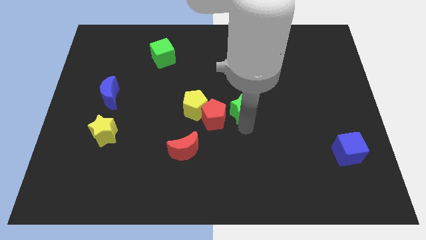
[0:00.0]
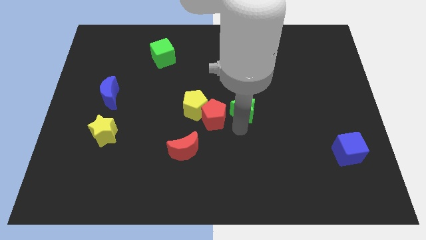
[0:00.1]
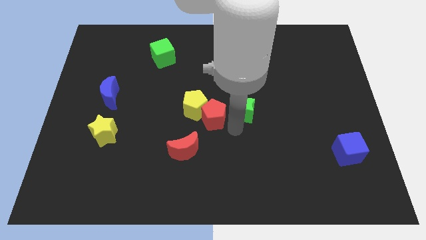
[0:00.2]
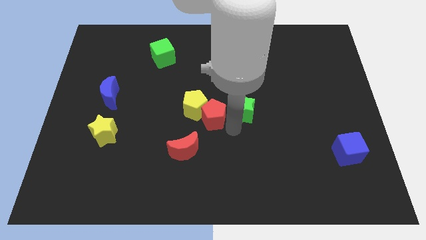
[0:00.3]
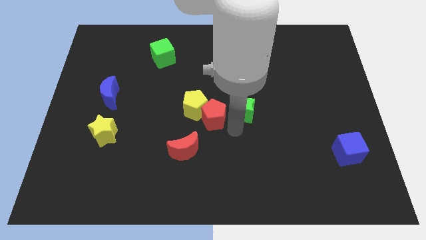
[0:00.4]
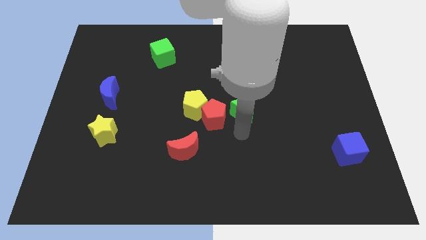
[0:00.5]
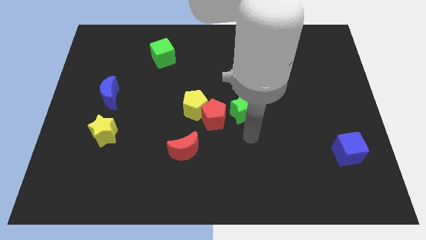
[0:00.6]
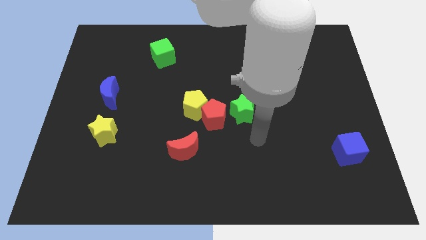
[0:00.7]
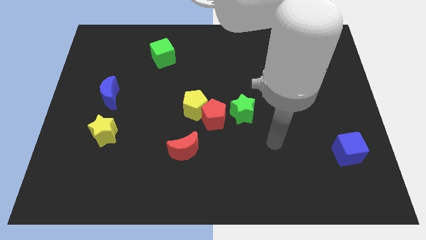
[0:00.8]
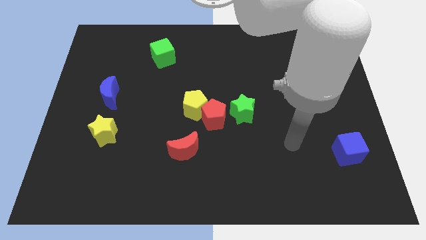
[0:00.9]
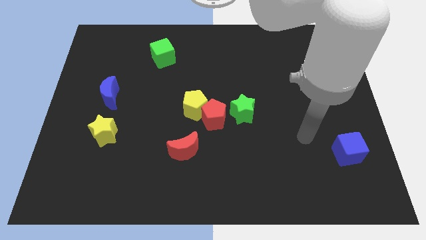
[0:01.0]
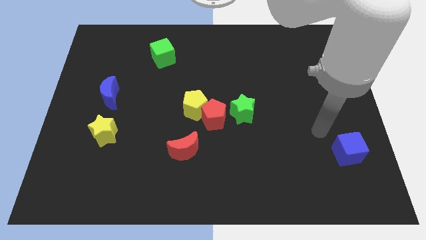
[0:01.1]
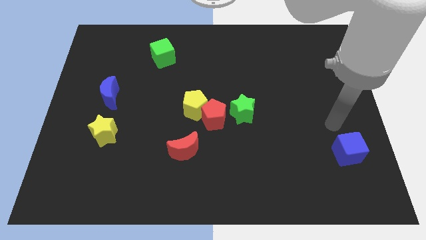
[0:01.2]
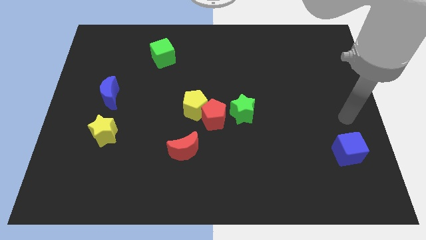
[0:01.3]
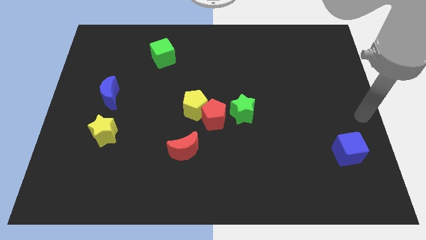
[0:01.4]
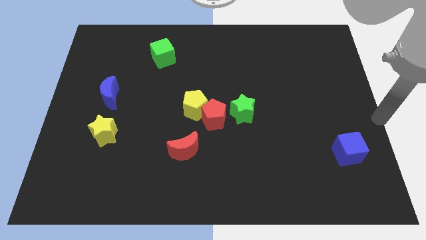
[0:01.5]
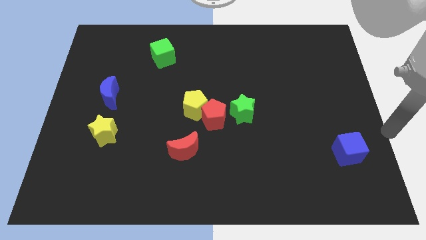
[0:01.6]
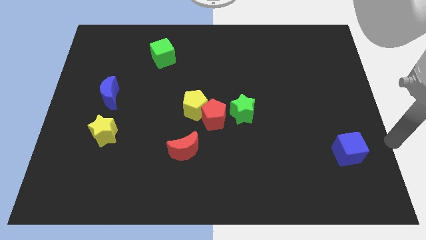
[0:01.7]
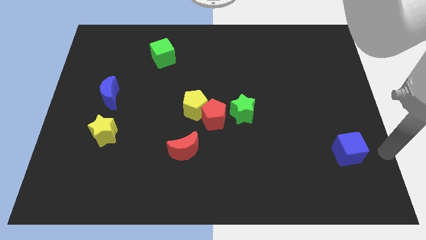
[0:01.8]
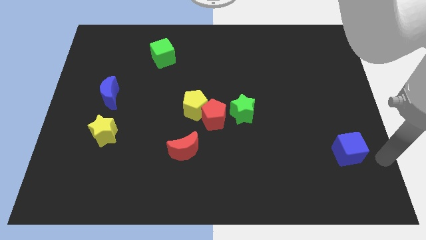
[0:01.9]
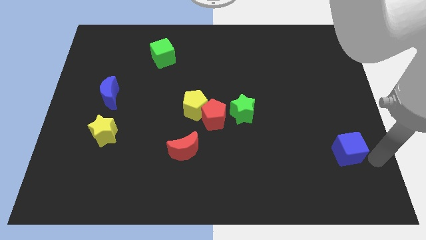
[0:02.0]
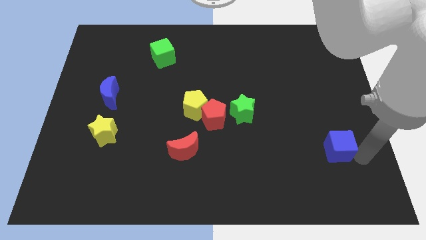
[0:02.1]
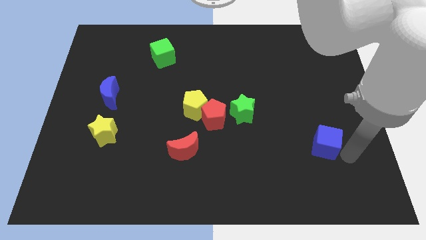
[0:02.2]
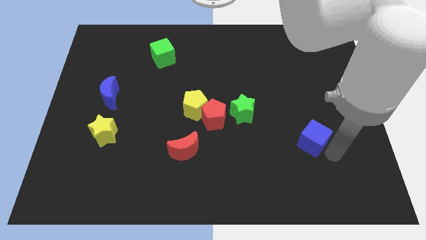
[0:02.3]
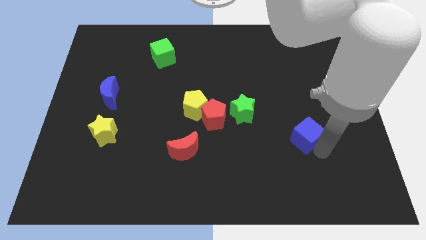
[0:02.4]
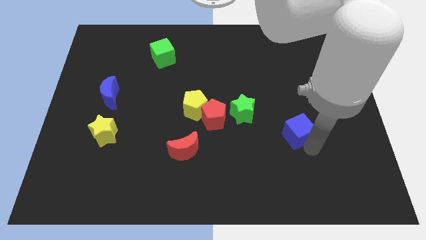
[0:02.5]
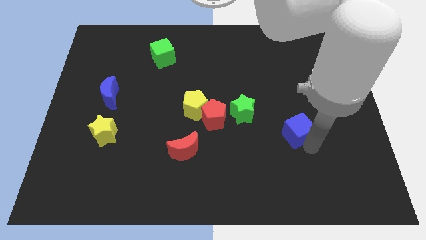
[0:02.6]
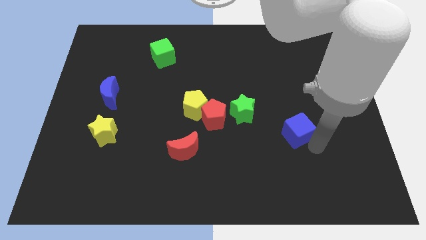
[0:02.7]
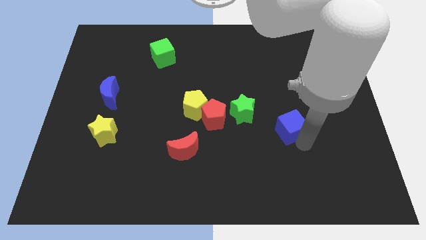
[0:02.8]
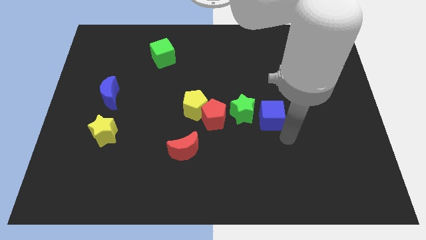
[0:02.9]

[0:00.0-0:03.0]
push the blue cube to the right side of the green star

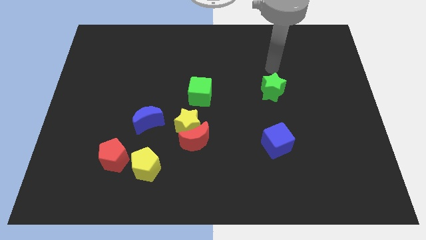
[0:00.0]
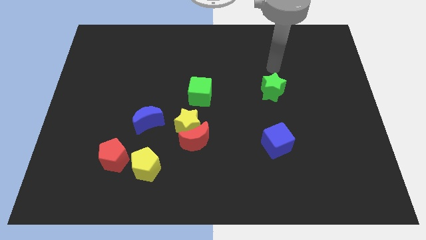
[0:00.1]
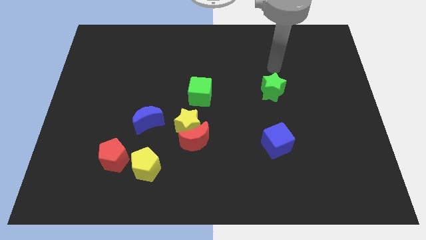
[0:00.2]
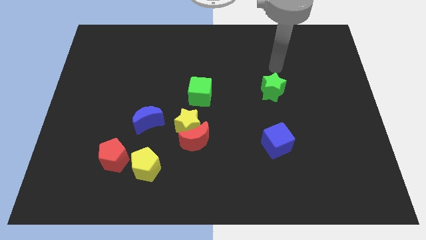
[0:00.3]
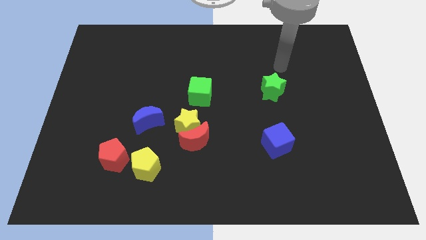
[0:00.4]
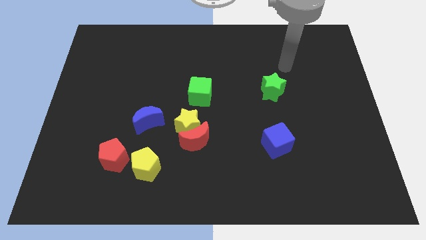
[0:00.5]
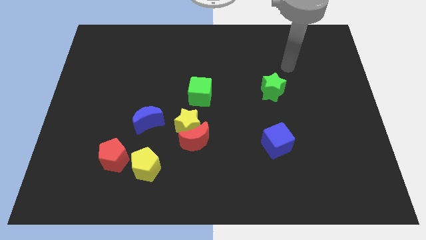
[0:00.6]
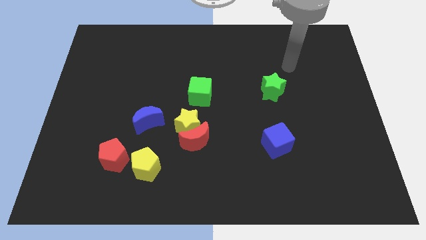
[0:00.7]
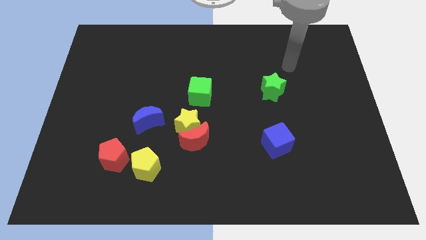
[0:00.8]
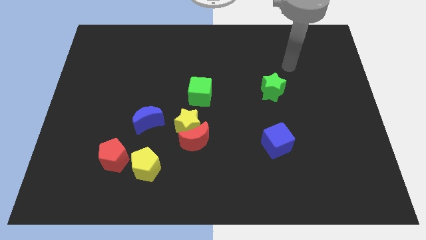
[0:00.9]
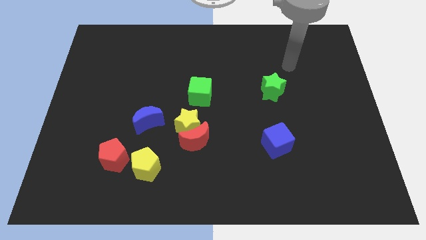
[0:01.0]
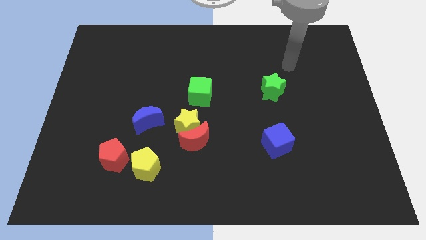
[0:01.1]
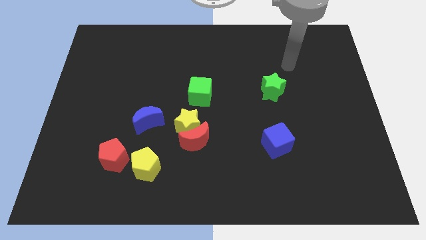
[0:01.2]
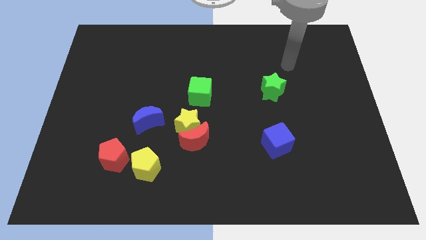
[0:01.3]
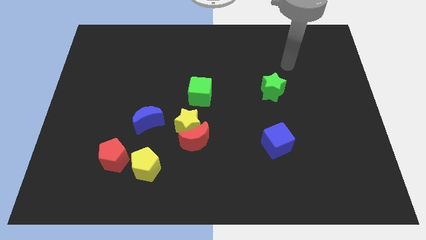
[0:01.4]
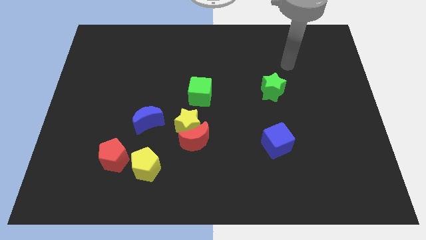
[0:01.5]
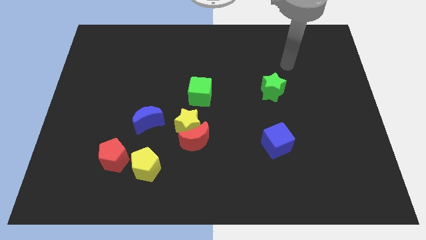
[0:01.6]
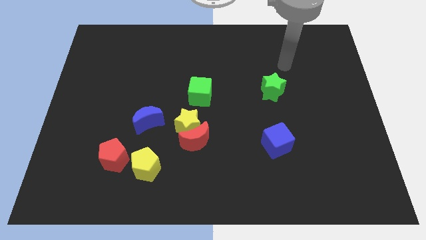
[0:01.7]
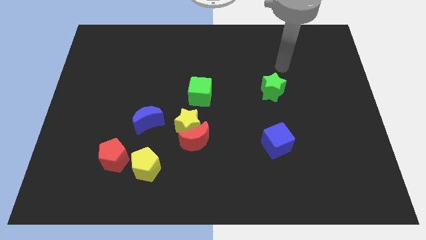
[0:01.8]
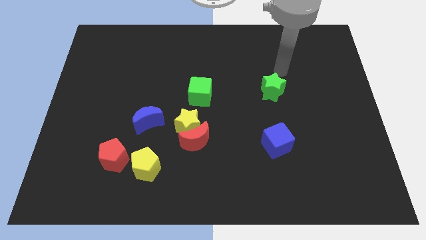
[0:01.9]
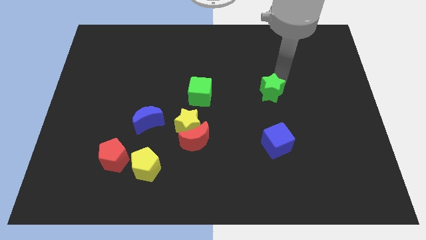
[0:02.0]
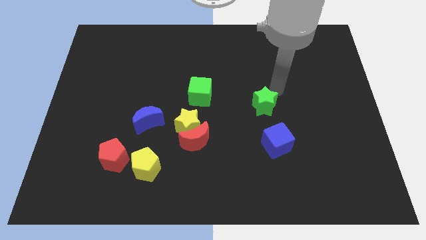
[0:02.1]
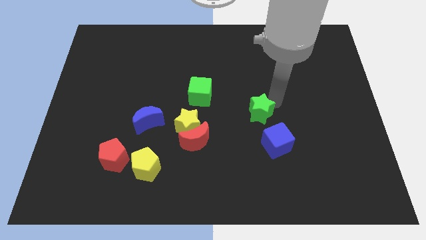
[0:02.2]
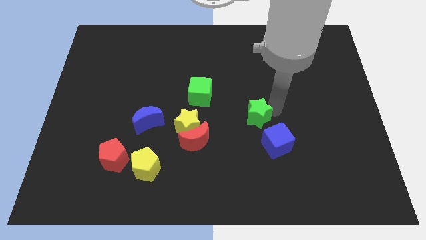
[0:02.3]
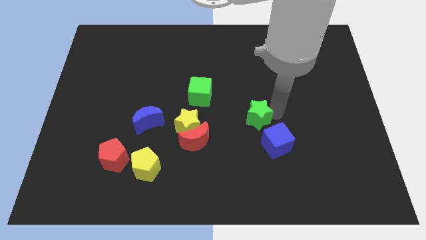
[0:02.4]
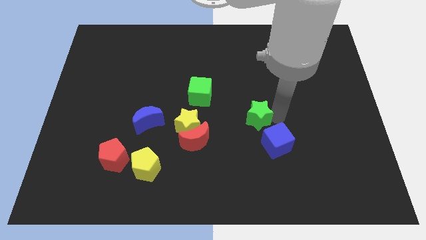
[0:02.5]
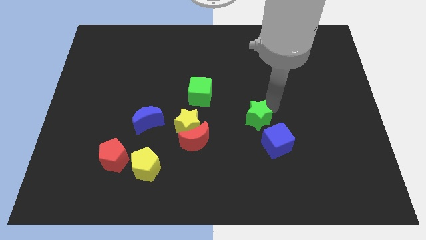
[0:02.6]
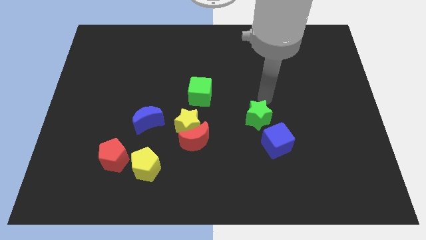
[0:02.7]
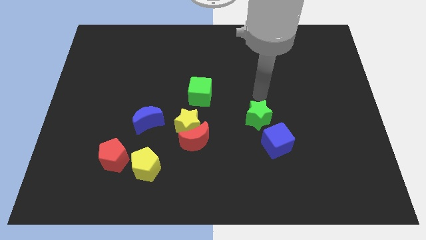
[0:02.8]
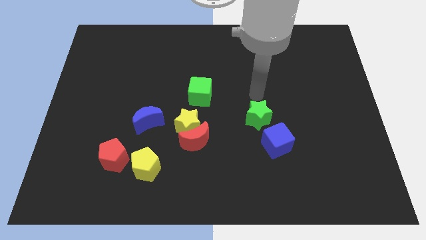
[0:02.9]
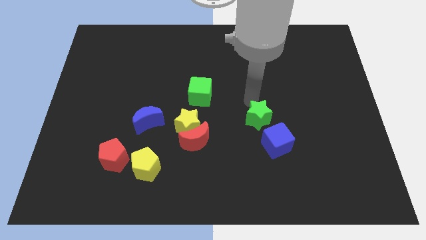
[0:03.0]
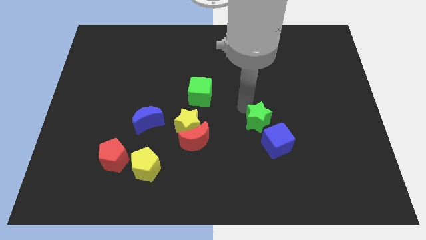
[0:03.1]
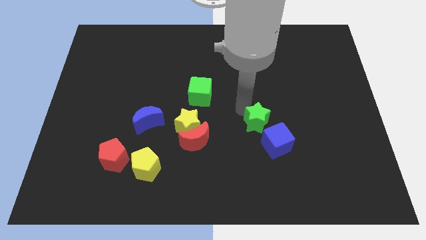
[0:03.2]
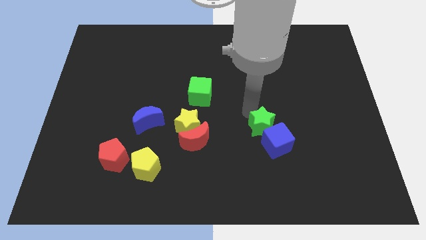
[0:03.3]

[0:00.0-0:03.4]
take the green star close to the blue cube

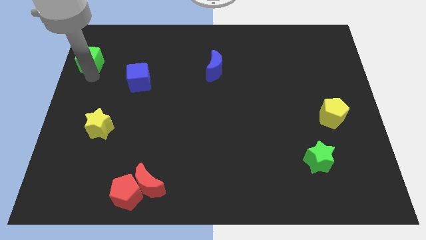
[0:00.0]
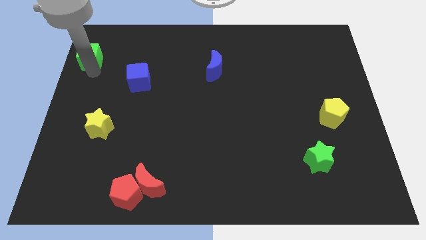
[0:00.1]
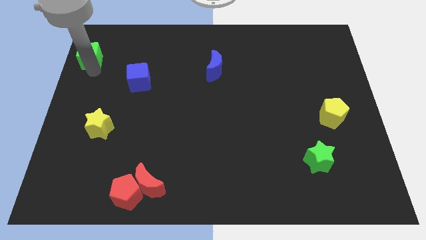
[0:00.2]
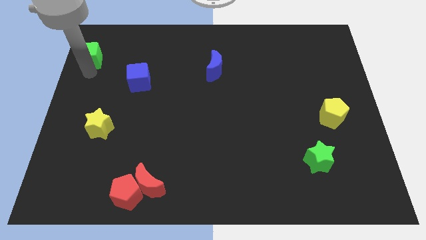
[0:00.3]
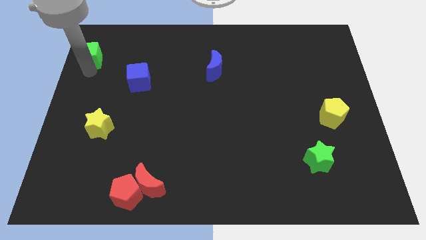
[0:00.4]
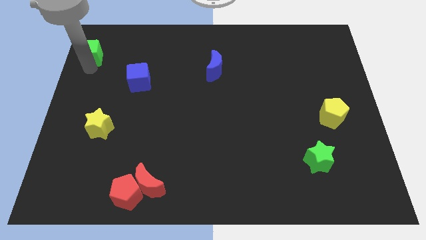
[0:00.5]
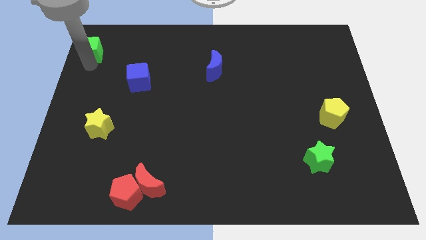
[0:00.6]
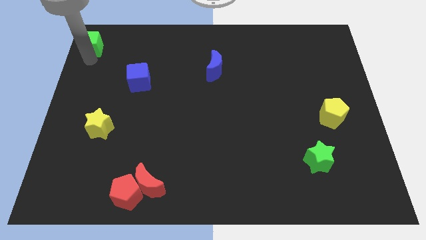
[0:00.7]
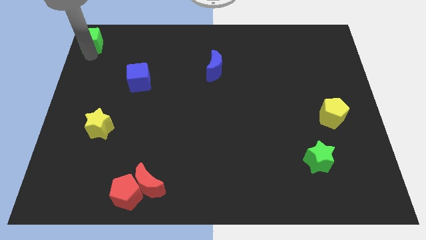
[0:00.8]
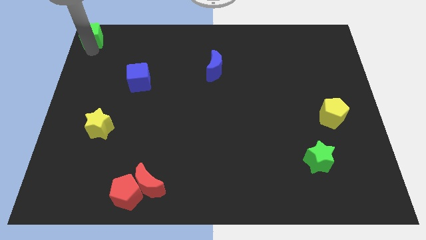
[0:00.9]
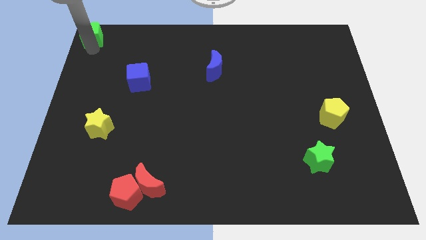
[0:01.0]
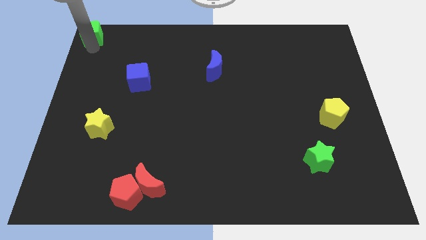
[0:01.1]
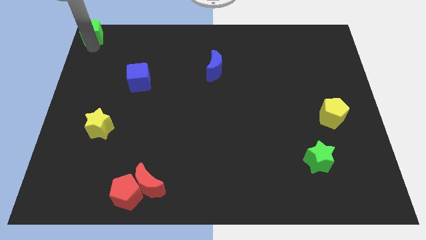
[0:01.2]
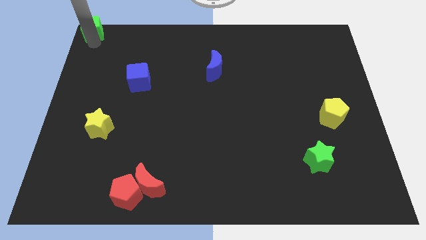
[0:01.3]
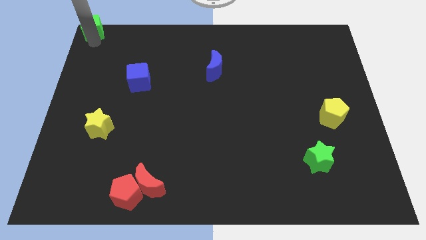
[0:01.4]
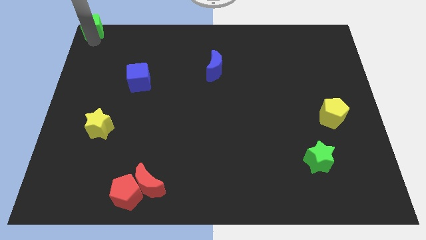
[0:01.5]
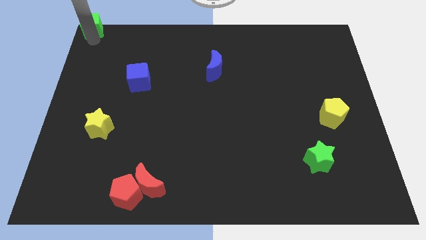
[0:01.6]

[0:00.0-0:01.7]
move the green cube to the top left corner

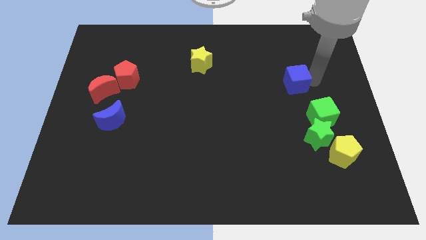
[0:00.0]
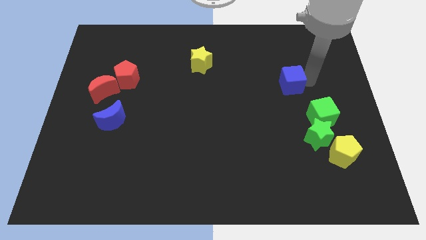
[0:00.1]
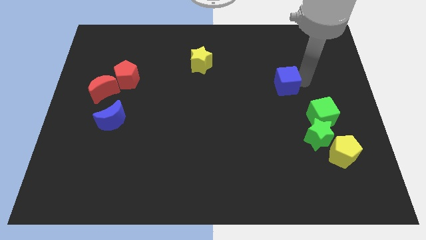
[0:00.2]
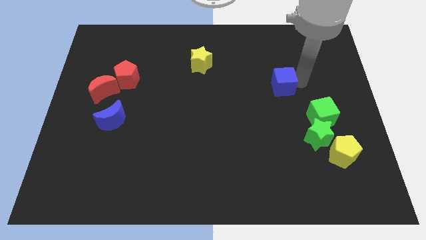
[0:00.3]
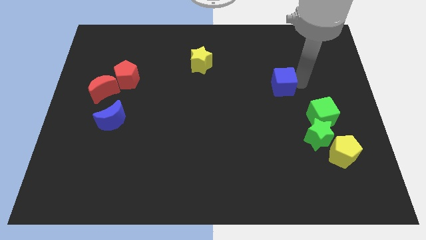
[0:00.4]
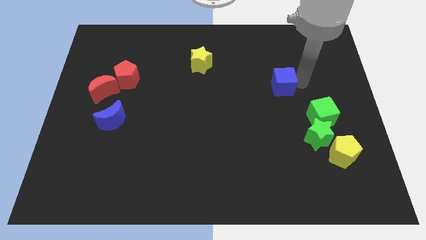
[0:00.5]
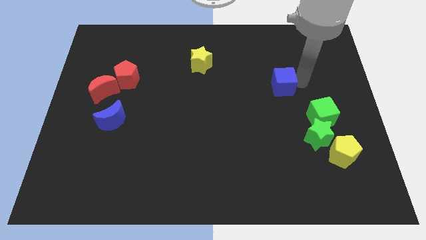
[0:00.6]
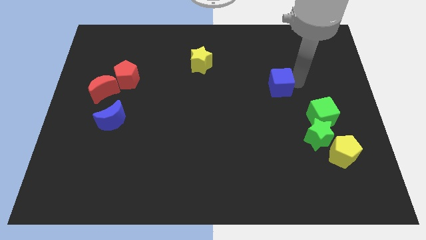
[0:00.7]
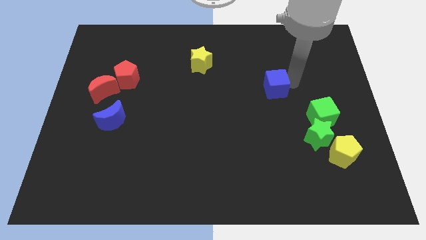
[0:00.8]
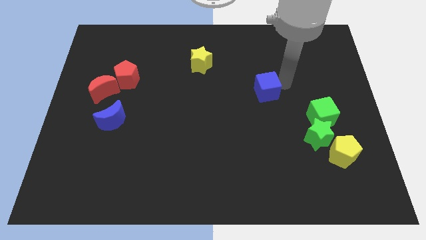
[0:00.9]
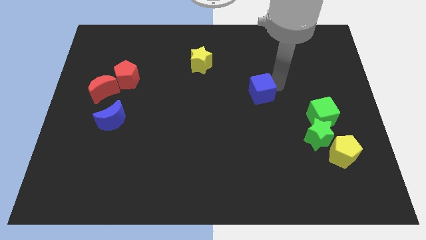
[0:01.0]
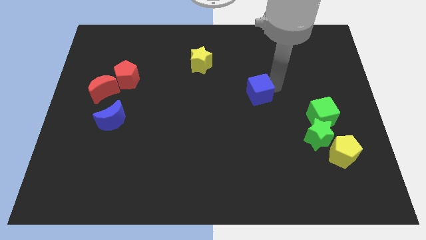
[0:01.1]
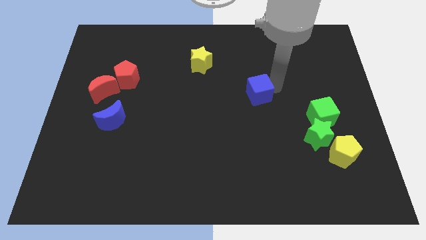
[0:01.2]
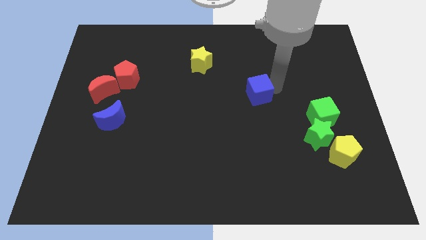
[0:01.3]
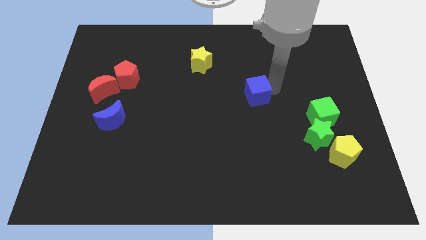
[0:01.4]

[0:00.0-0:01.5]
put the blue cube between the yellow star and green cube
